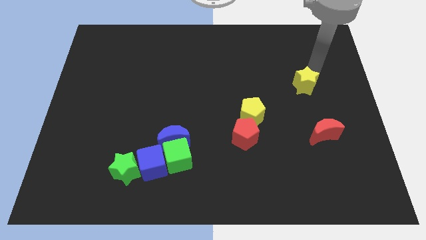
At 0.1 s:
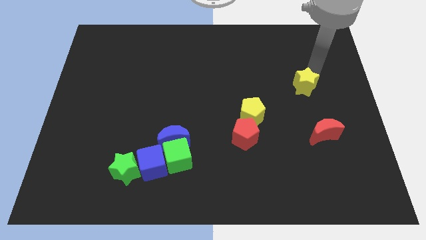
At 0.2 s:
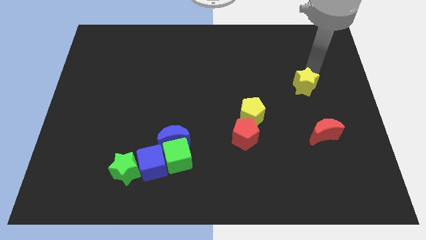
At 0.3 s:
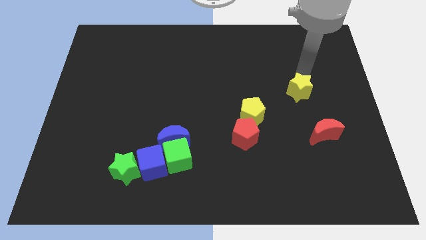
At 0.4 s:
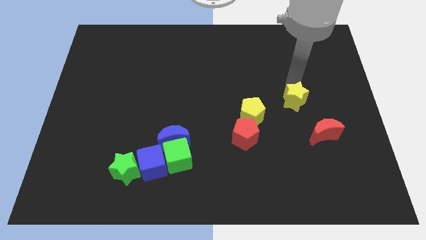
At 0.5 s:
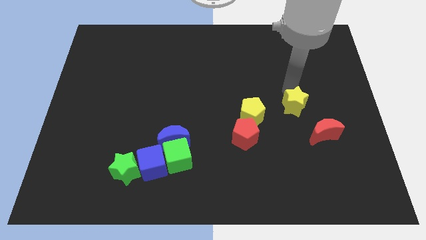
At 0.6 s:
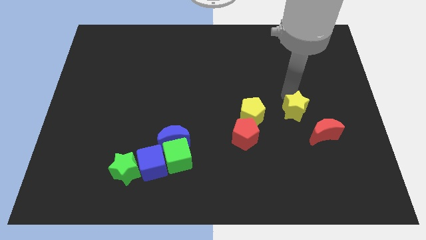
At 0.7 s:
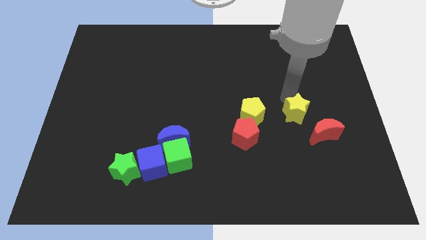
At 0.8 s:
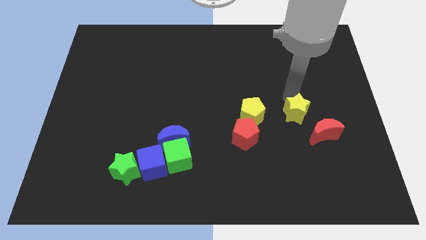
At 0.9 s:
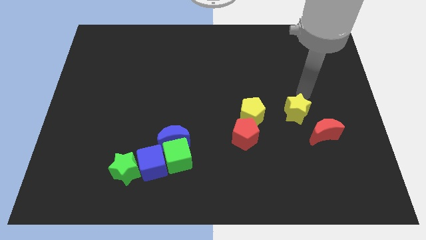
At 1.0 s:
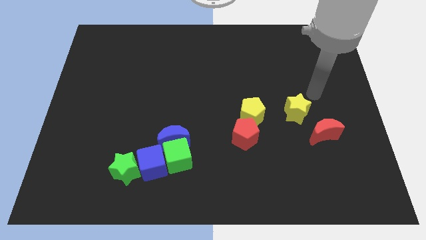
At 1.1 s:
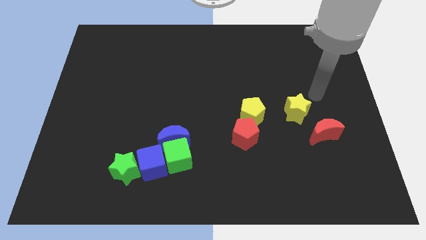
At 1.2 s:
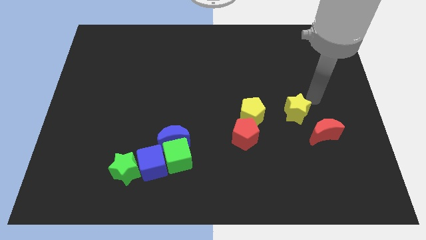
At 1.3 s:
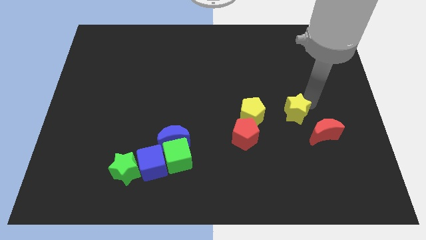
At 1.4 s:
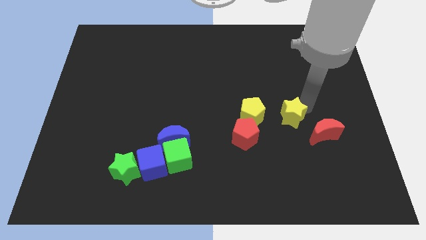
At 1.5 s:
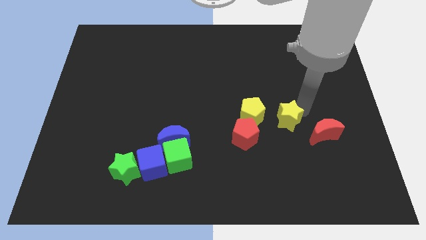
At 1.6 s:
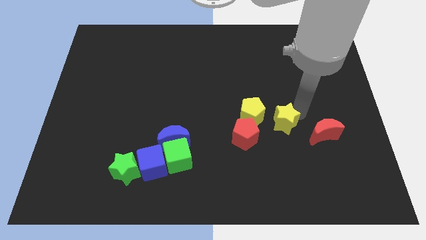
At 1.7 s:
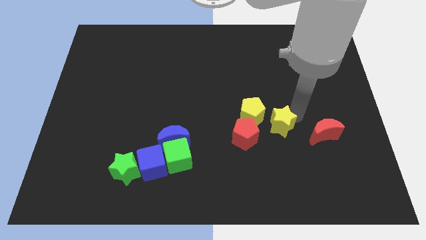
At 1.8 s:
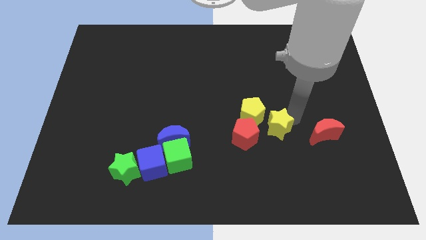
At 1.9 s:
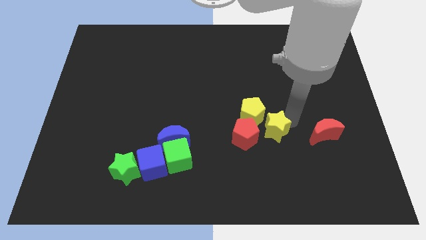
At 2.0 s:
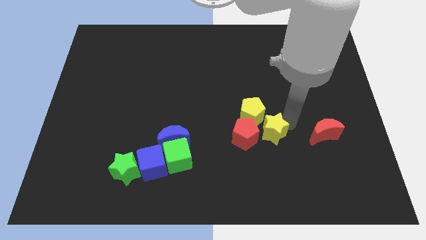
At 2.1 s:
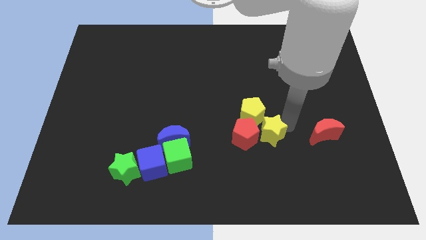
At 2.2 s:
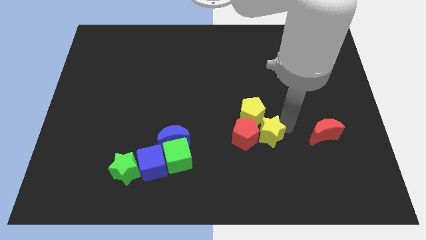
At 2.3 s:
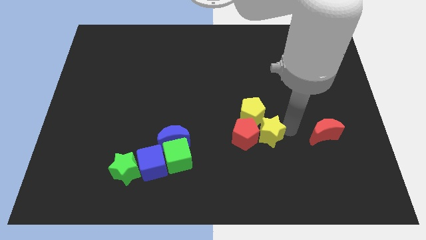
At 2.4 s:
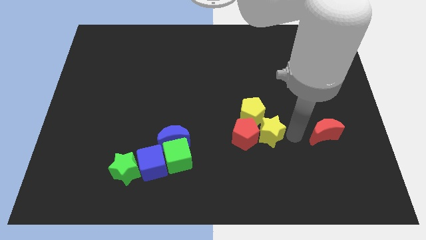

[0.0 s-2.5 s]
place the yellow star to the right side of red pentagon

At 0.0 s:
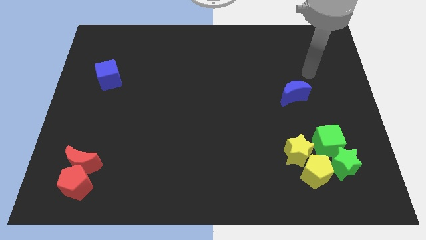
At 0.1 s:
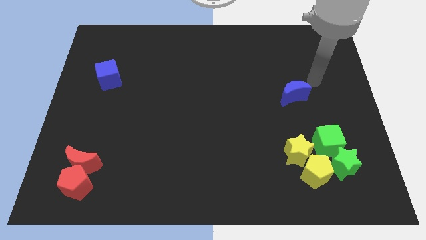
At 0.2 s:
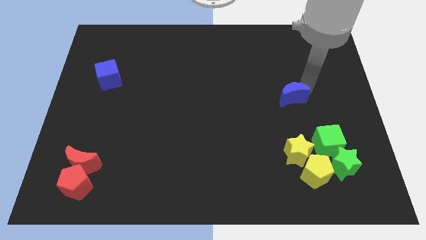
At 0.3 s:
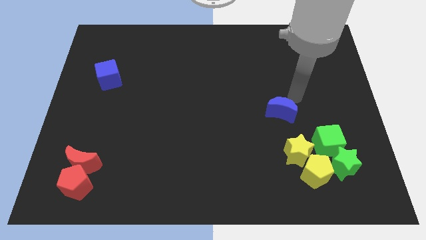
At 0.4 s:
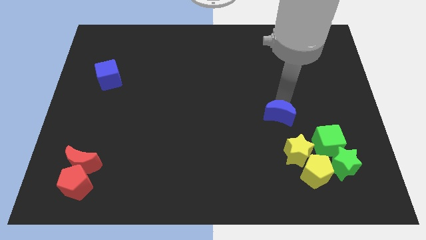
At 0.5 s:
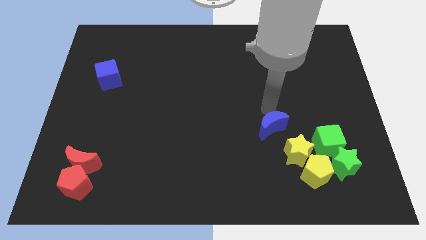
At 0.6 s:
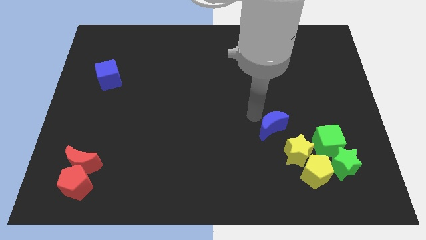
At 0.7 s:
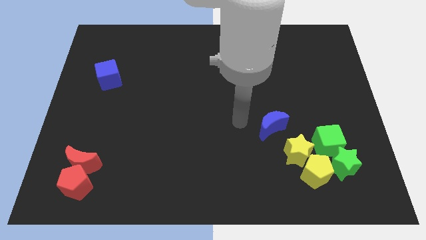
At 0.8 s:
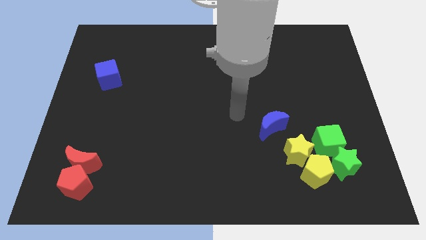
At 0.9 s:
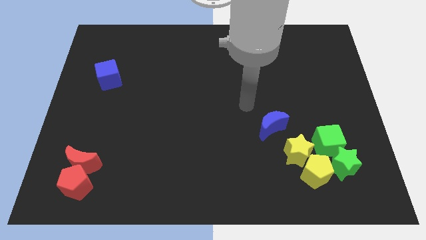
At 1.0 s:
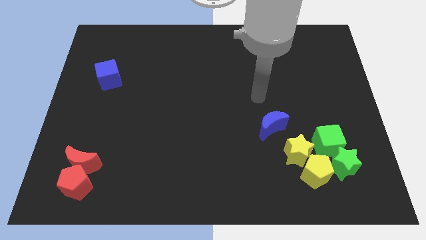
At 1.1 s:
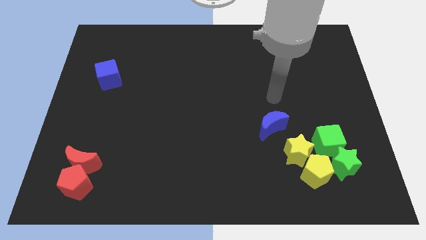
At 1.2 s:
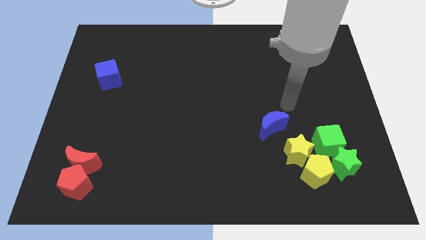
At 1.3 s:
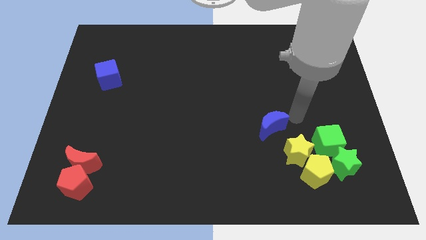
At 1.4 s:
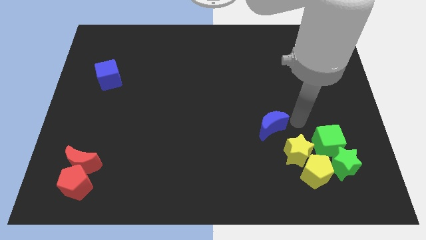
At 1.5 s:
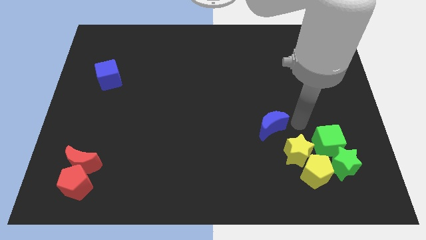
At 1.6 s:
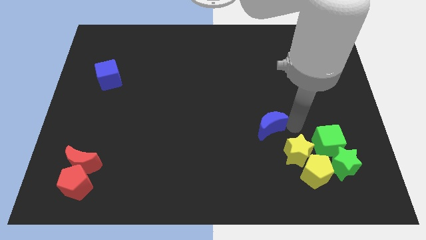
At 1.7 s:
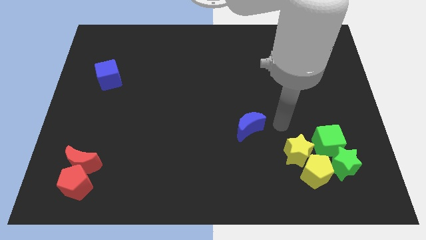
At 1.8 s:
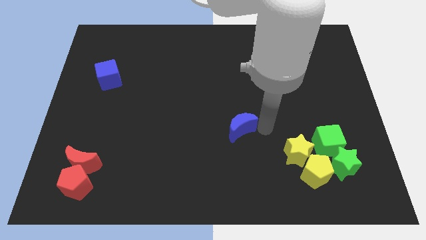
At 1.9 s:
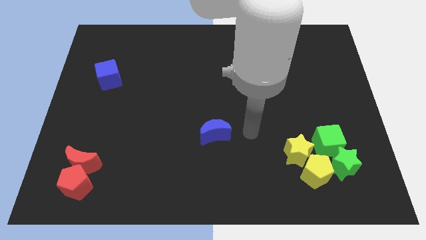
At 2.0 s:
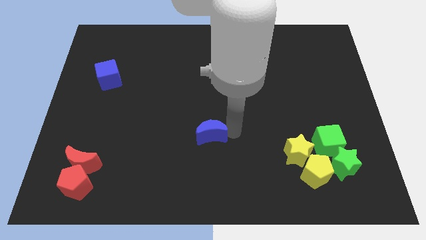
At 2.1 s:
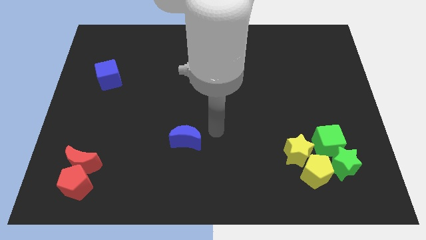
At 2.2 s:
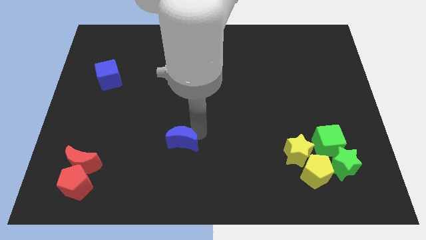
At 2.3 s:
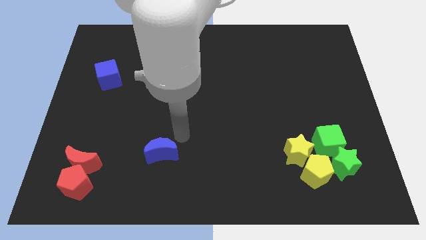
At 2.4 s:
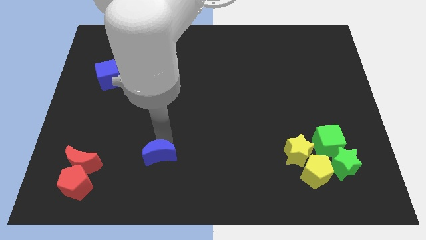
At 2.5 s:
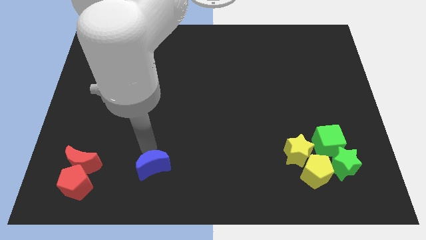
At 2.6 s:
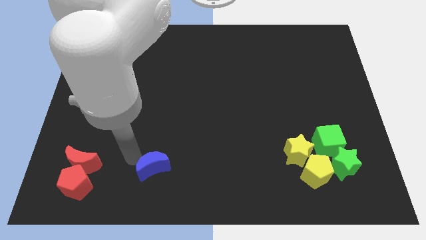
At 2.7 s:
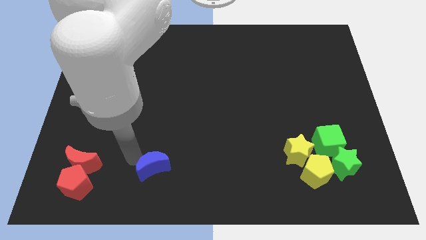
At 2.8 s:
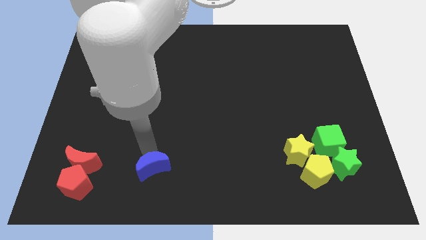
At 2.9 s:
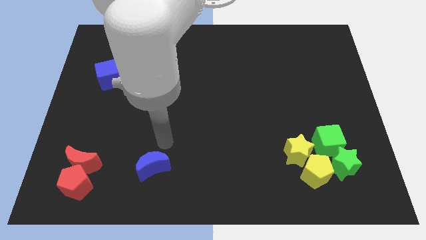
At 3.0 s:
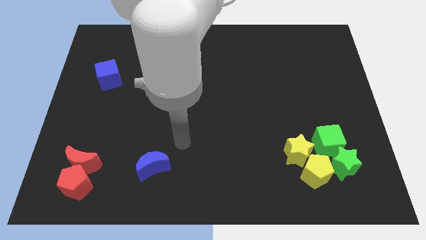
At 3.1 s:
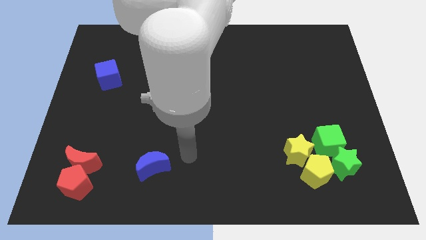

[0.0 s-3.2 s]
place the blue crescent to the right of the red crescent

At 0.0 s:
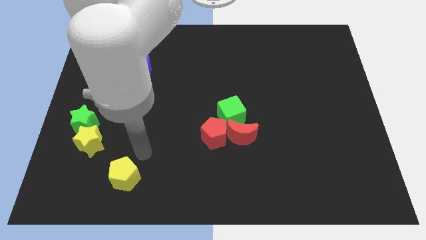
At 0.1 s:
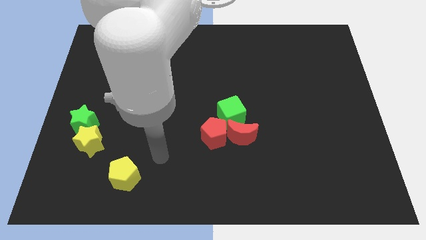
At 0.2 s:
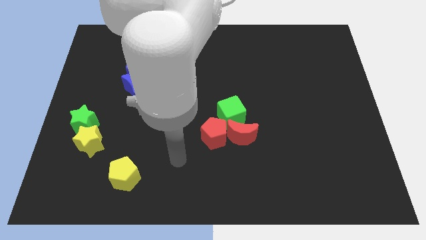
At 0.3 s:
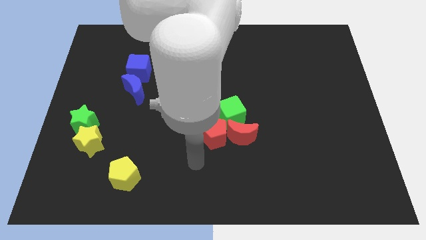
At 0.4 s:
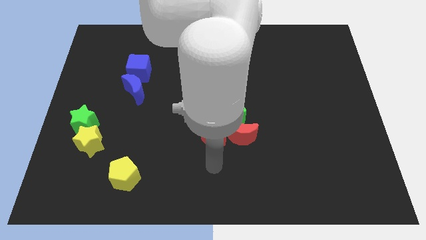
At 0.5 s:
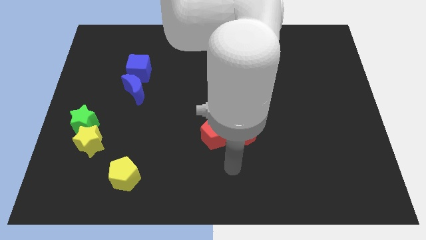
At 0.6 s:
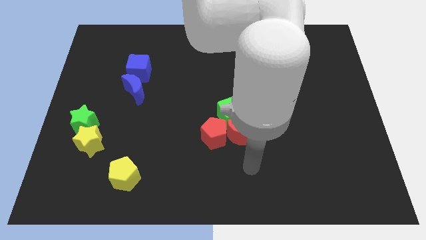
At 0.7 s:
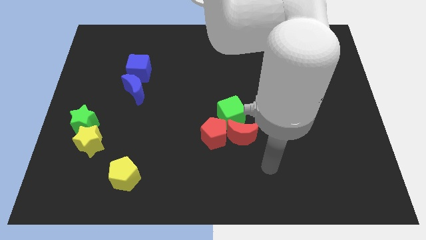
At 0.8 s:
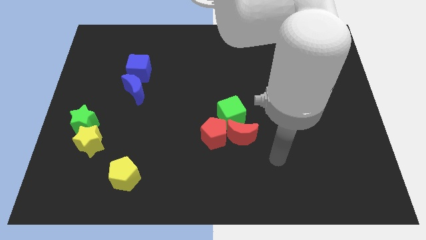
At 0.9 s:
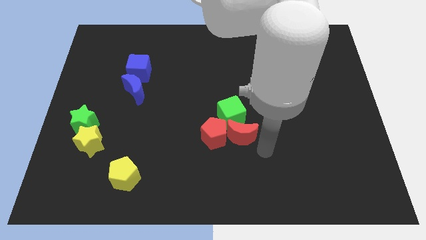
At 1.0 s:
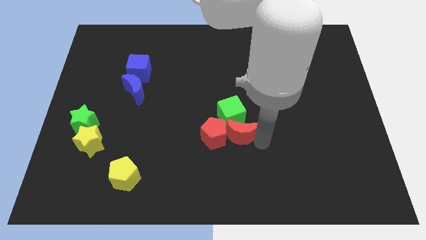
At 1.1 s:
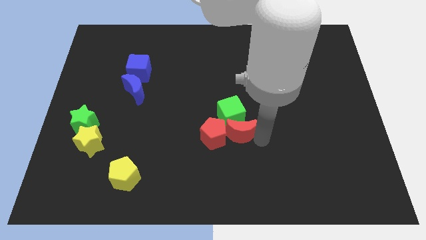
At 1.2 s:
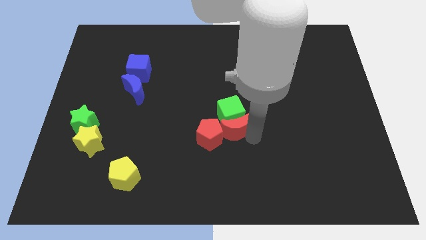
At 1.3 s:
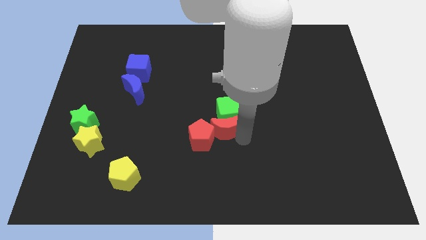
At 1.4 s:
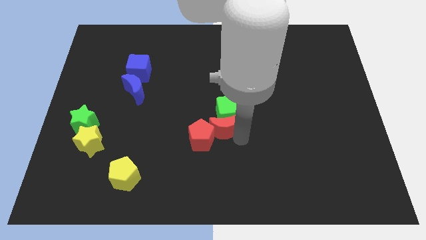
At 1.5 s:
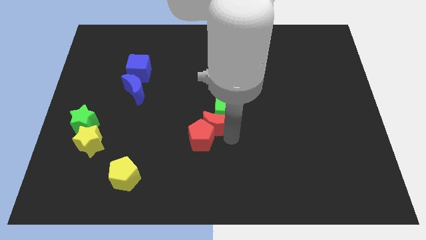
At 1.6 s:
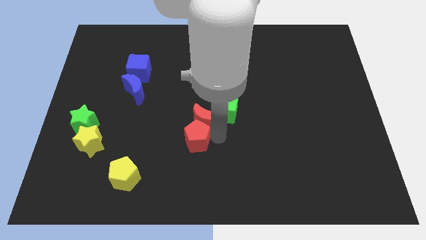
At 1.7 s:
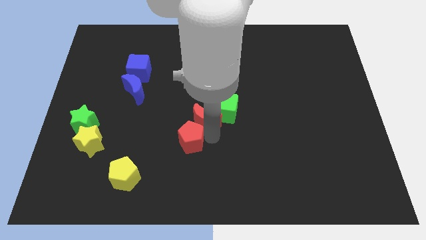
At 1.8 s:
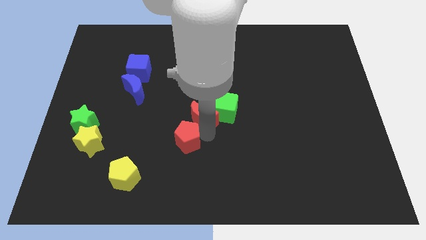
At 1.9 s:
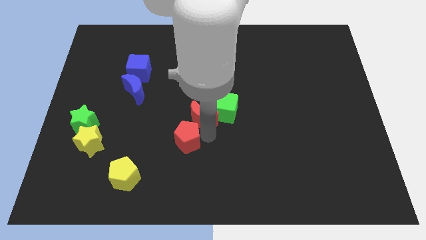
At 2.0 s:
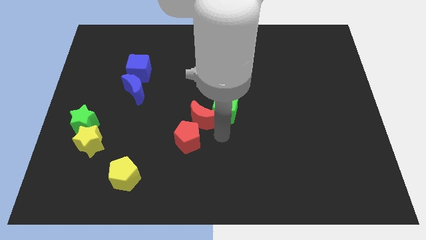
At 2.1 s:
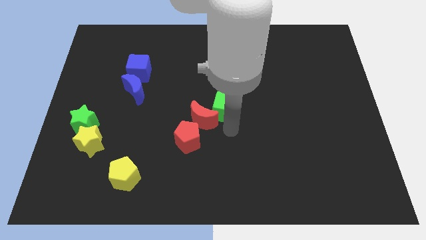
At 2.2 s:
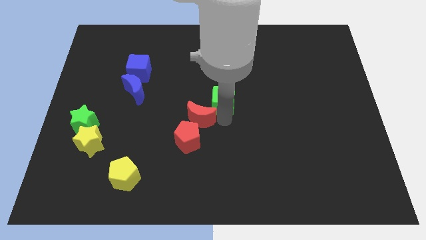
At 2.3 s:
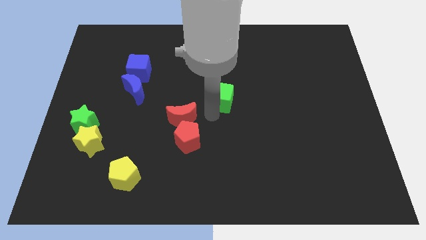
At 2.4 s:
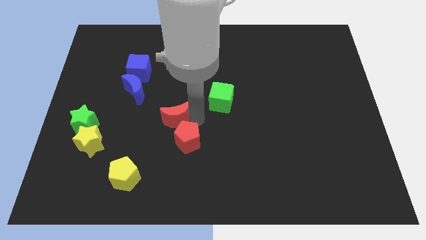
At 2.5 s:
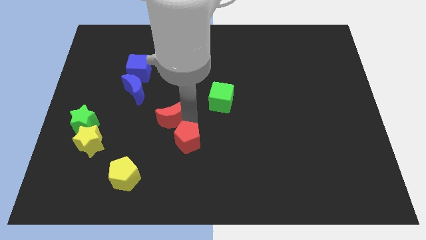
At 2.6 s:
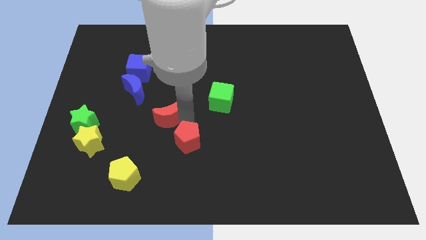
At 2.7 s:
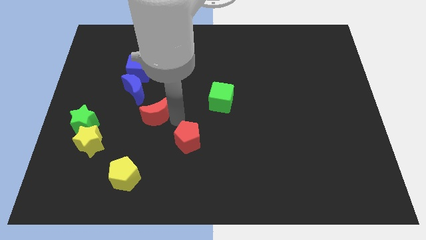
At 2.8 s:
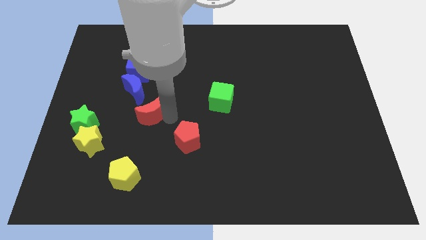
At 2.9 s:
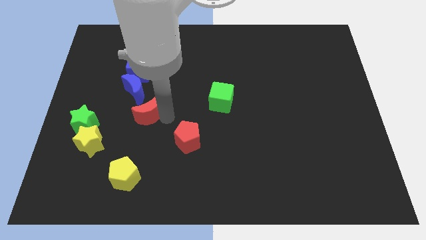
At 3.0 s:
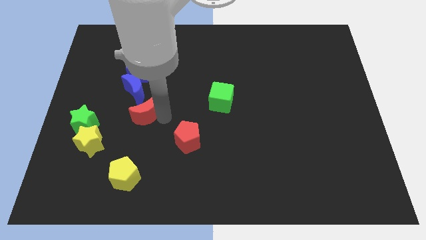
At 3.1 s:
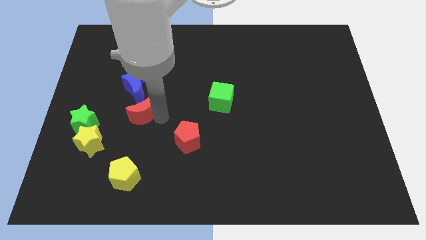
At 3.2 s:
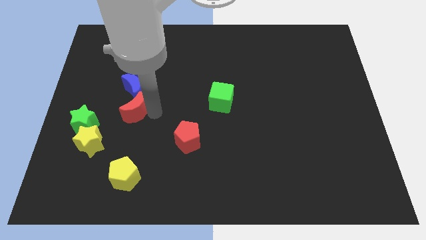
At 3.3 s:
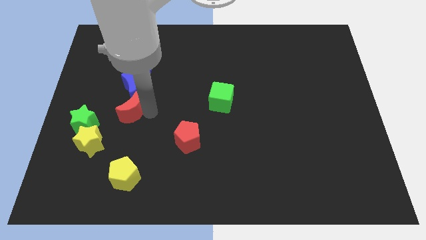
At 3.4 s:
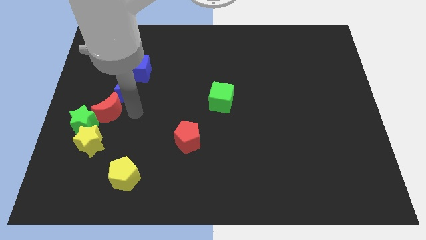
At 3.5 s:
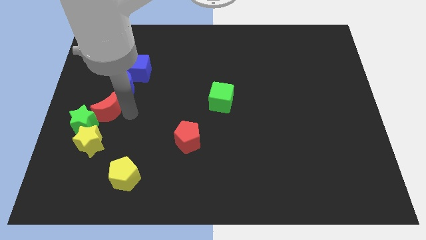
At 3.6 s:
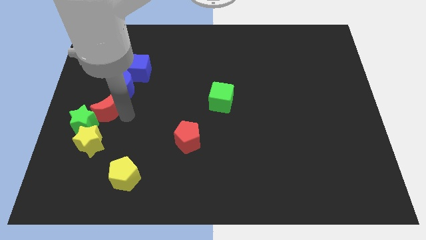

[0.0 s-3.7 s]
place the red crescent to the top of the green star
